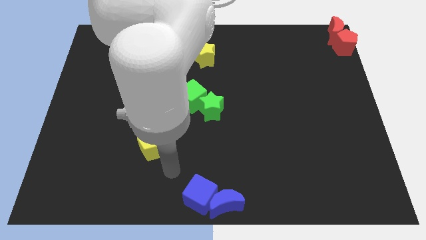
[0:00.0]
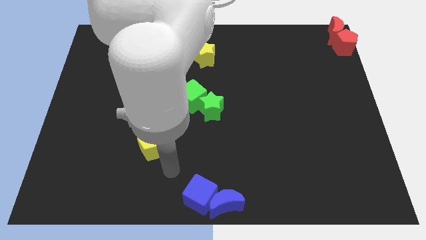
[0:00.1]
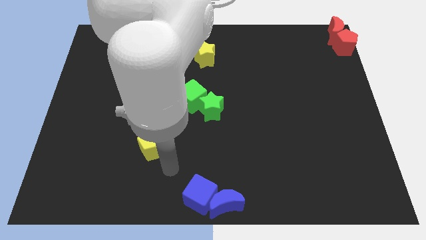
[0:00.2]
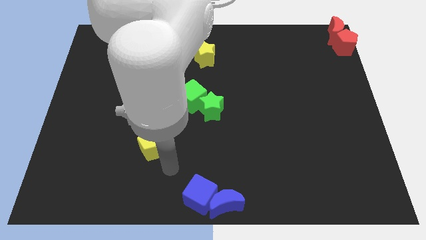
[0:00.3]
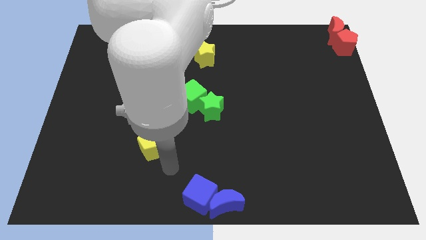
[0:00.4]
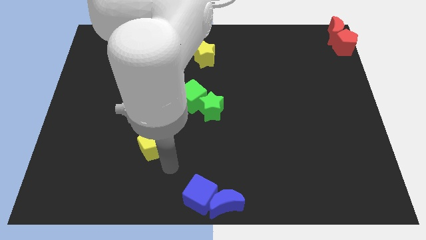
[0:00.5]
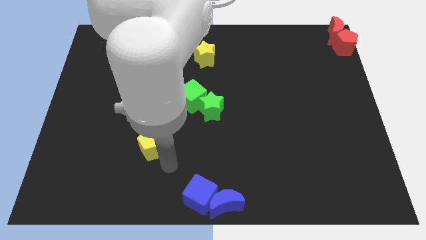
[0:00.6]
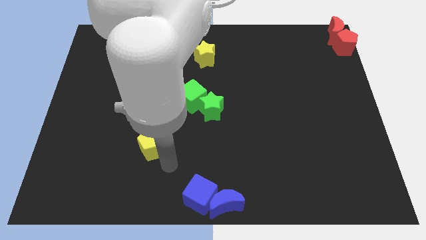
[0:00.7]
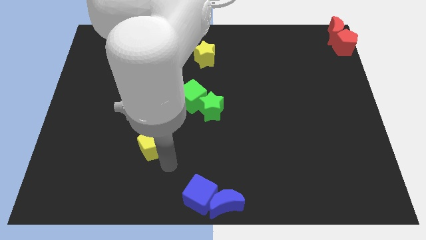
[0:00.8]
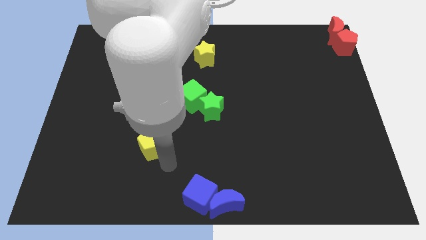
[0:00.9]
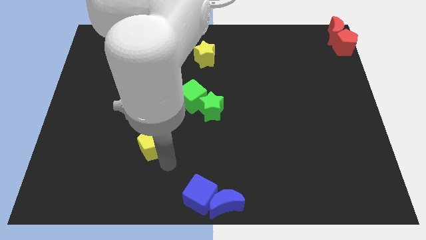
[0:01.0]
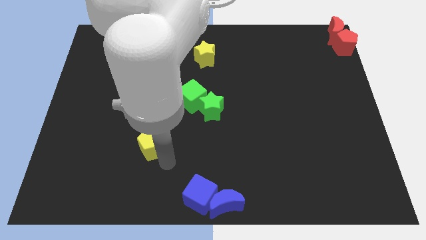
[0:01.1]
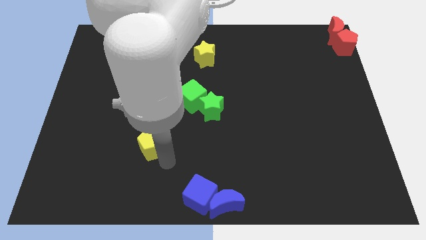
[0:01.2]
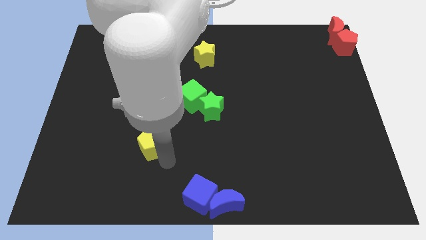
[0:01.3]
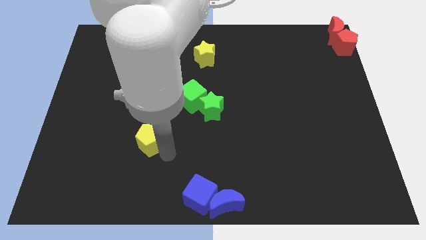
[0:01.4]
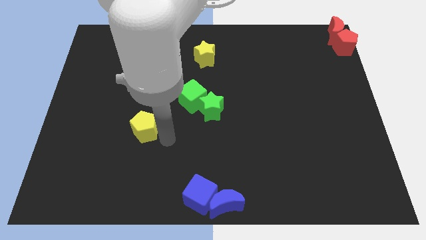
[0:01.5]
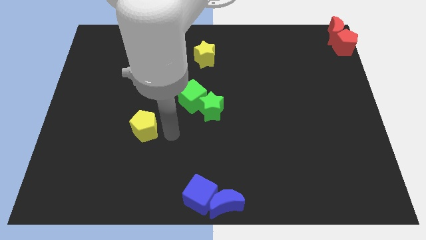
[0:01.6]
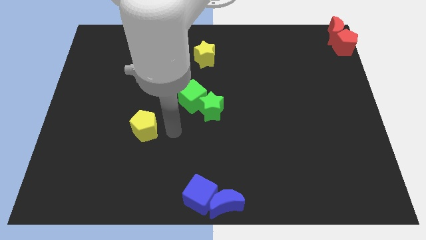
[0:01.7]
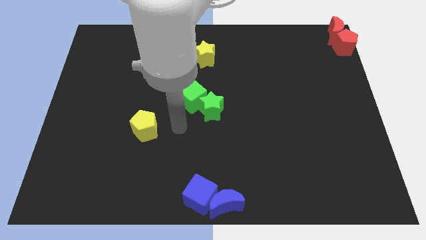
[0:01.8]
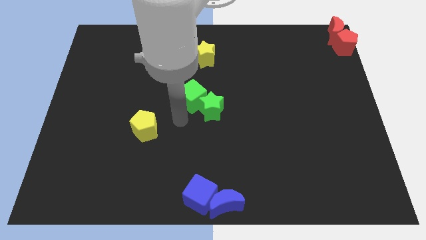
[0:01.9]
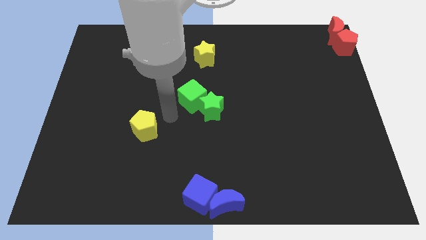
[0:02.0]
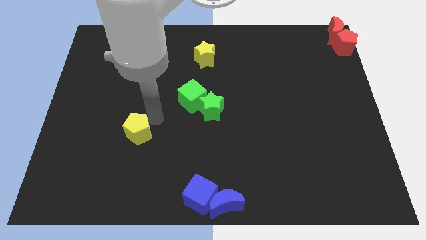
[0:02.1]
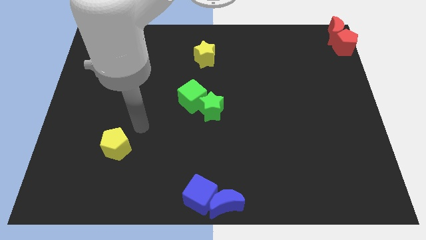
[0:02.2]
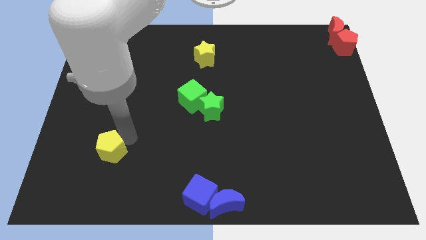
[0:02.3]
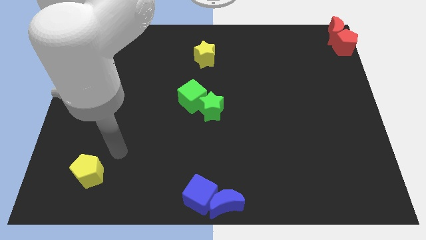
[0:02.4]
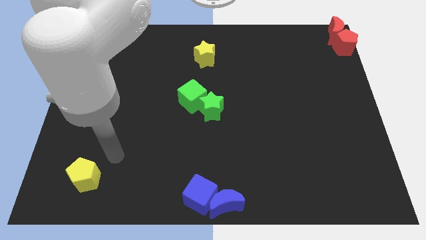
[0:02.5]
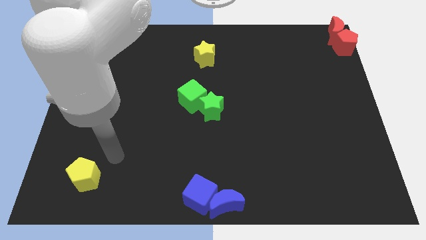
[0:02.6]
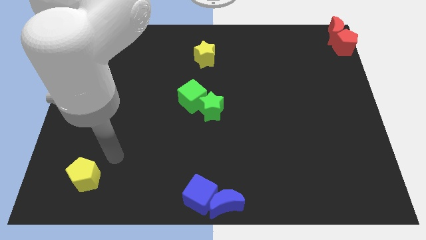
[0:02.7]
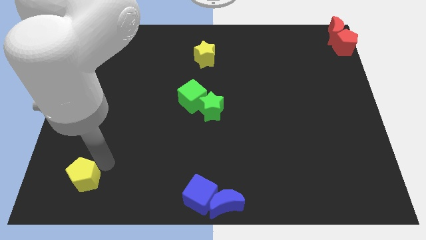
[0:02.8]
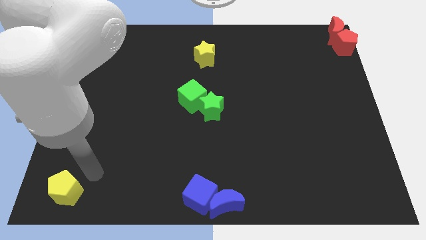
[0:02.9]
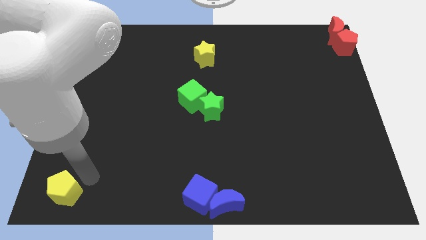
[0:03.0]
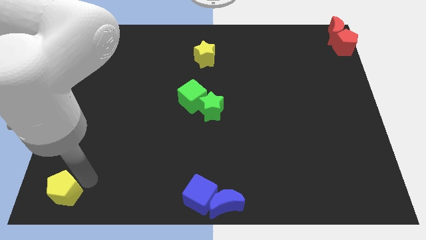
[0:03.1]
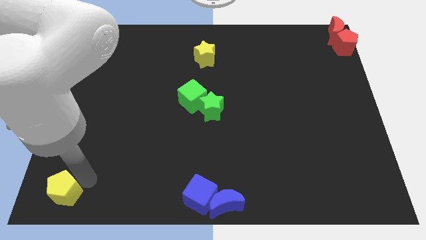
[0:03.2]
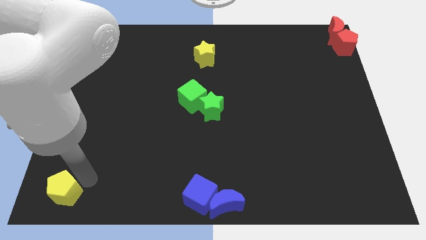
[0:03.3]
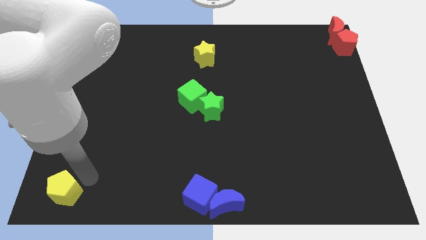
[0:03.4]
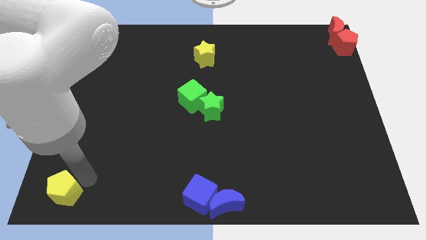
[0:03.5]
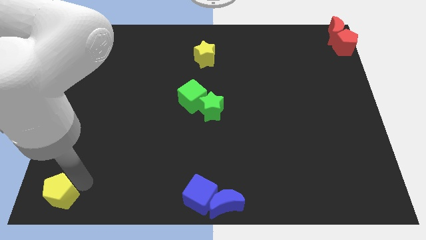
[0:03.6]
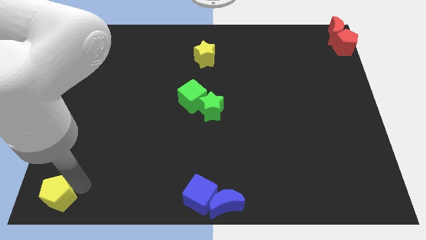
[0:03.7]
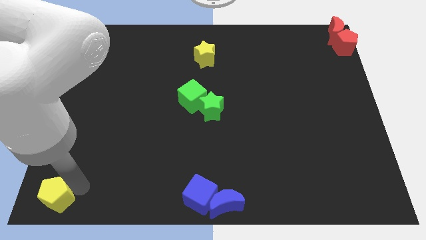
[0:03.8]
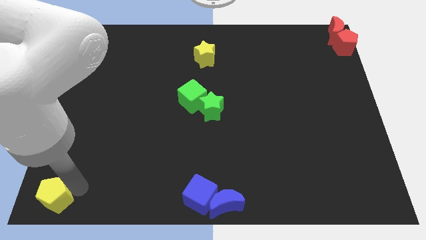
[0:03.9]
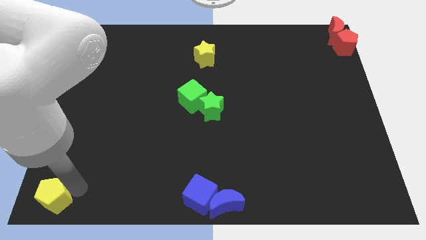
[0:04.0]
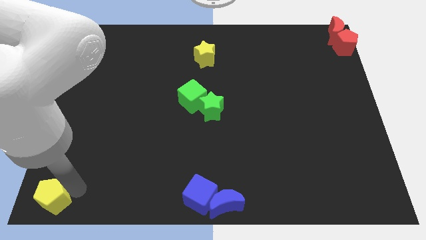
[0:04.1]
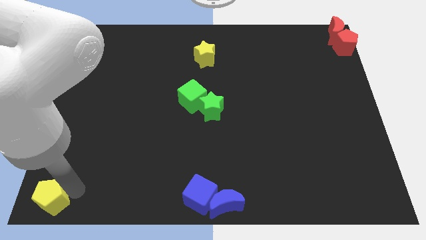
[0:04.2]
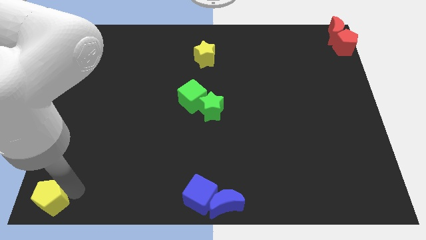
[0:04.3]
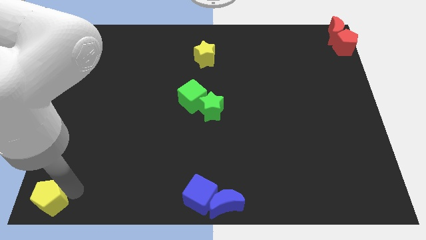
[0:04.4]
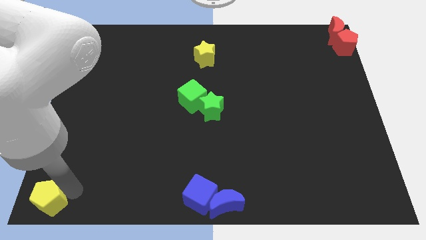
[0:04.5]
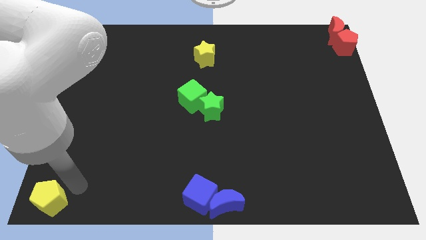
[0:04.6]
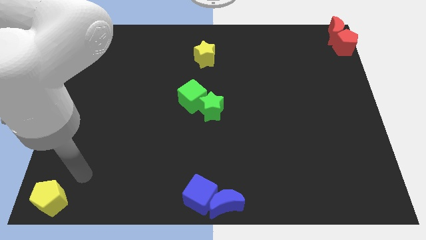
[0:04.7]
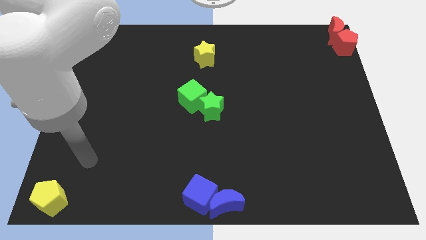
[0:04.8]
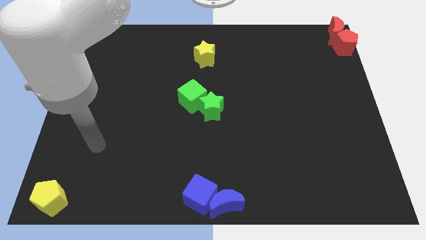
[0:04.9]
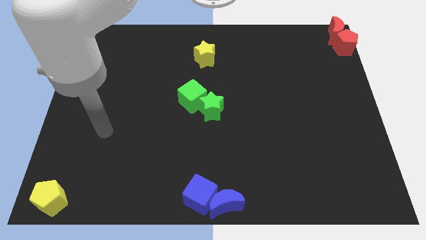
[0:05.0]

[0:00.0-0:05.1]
push yellow pentagon towards bottom left side of the board

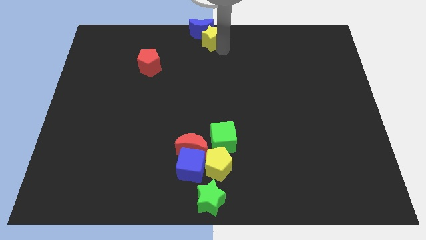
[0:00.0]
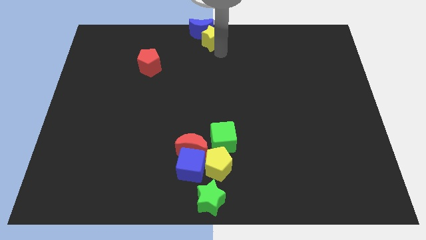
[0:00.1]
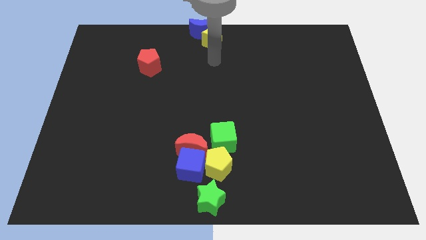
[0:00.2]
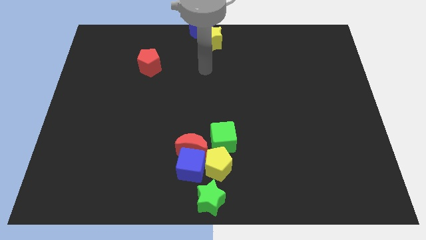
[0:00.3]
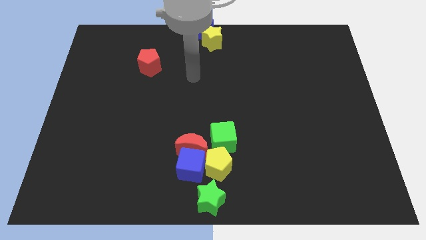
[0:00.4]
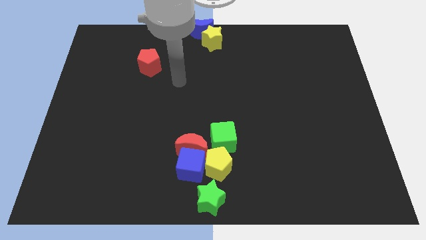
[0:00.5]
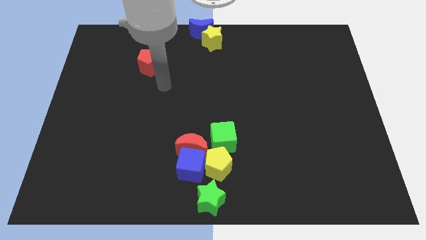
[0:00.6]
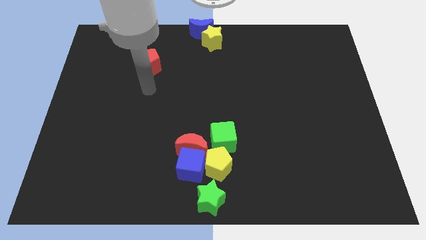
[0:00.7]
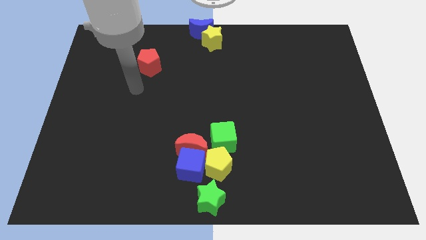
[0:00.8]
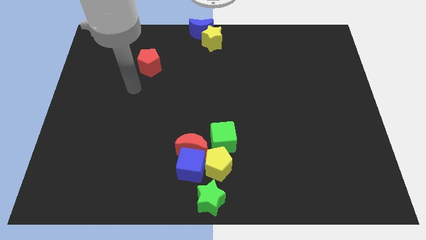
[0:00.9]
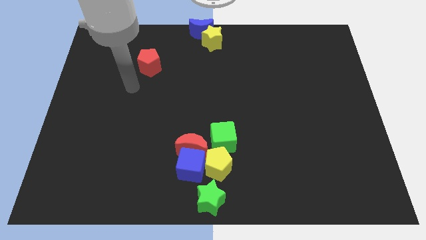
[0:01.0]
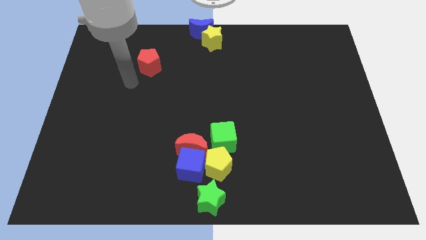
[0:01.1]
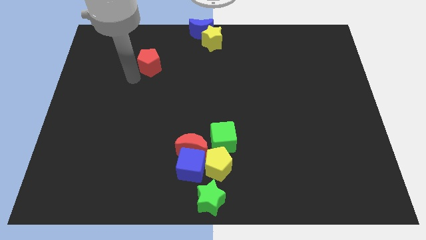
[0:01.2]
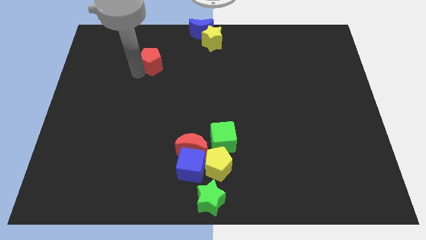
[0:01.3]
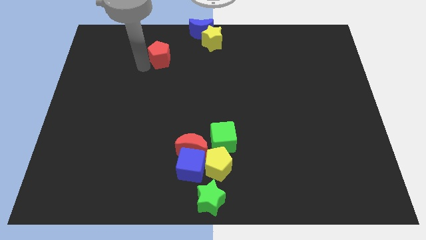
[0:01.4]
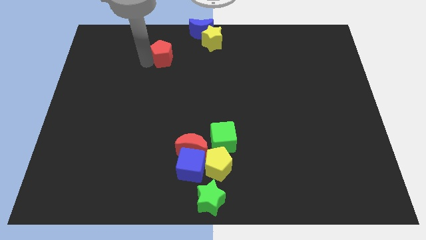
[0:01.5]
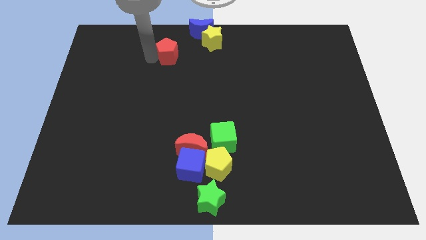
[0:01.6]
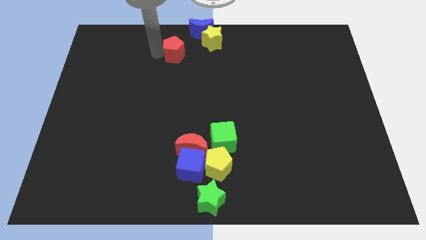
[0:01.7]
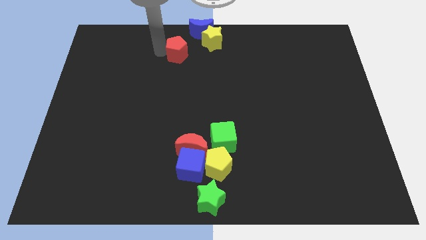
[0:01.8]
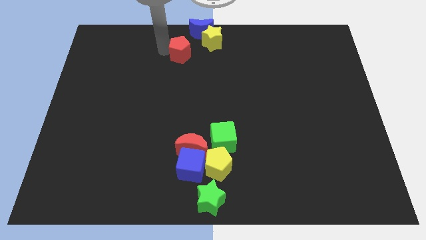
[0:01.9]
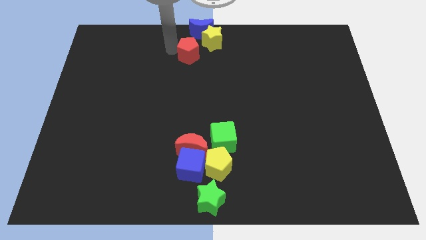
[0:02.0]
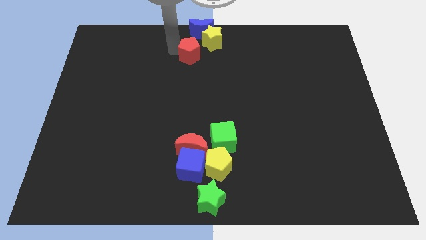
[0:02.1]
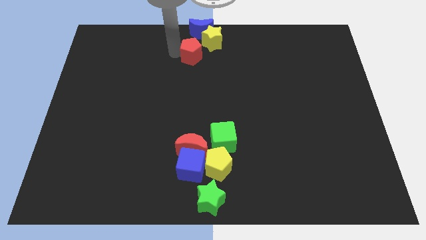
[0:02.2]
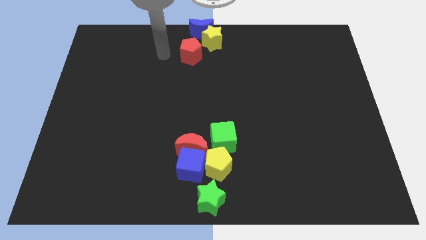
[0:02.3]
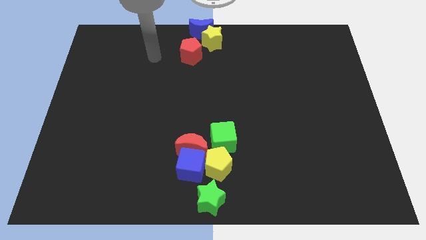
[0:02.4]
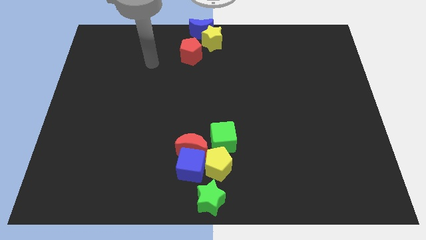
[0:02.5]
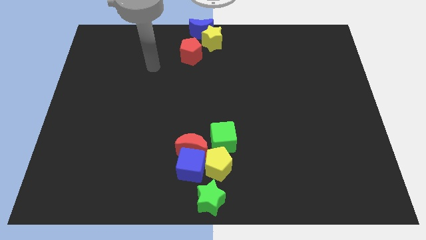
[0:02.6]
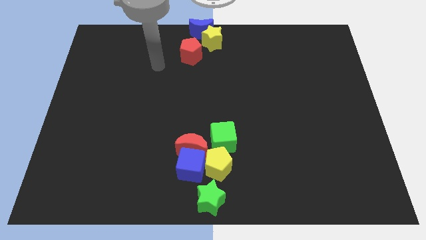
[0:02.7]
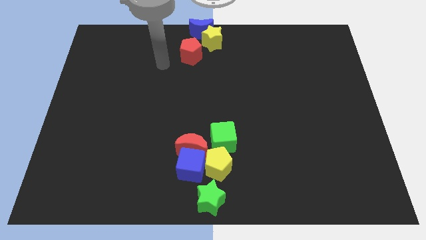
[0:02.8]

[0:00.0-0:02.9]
move the red pentagon diagonally to the yellow star

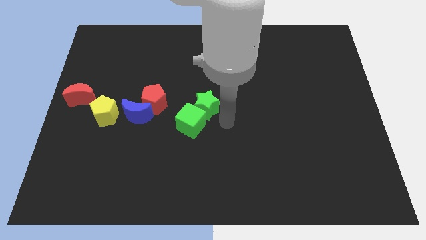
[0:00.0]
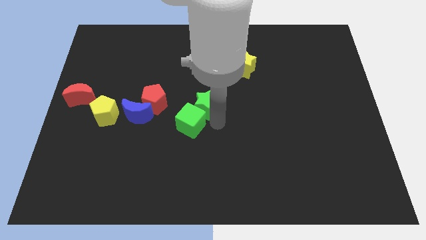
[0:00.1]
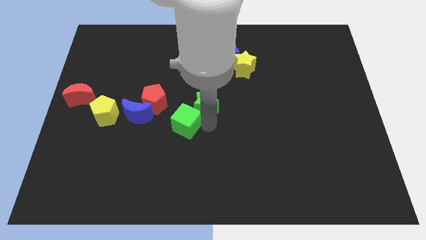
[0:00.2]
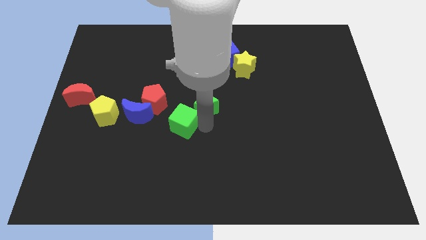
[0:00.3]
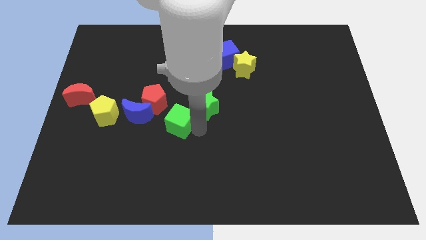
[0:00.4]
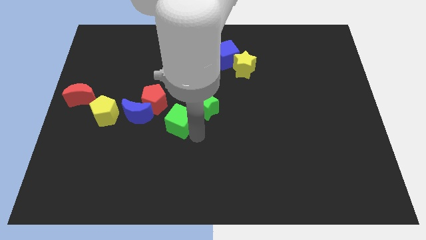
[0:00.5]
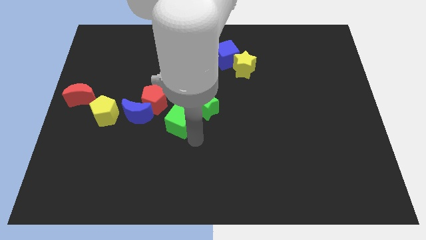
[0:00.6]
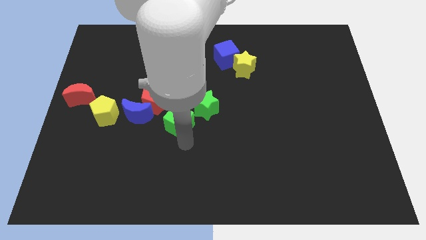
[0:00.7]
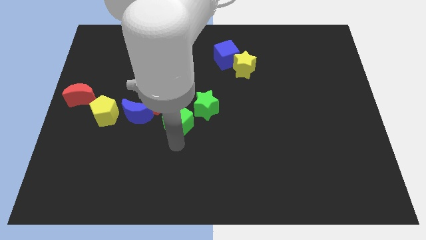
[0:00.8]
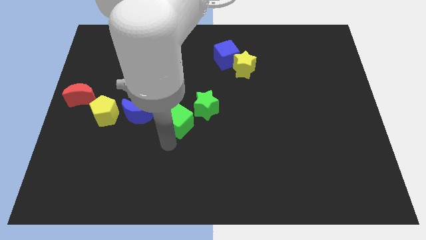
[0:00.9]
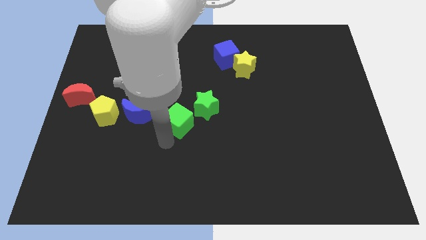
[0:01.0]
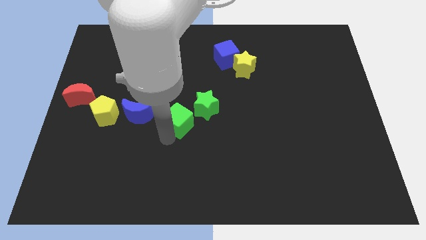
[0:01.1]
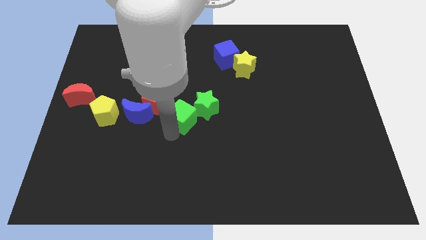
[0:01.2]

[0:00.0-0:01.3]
move the green cube to the right of the red pentagon in a diagonal
